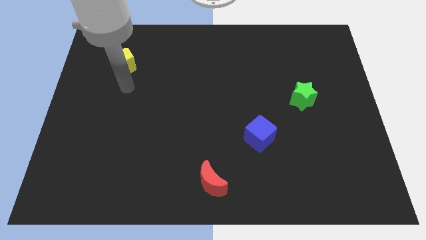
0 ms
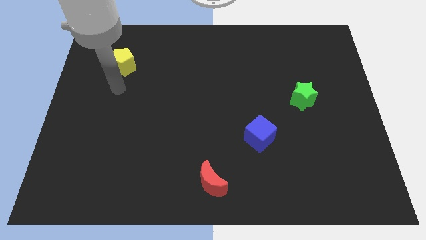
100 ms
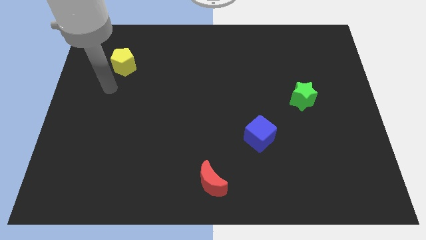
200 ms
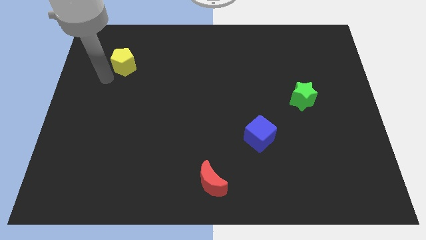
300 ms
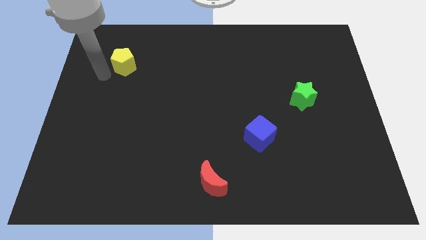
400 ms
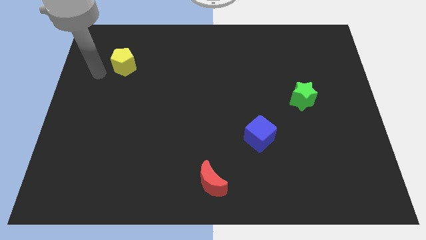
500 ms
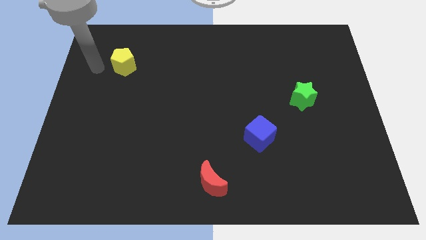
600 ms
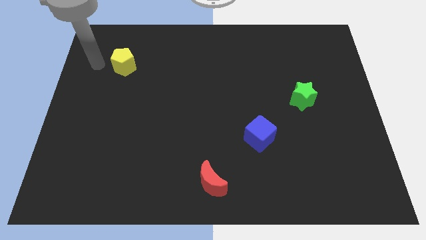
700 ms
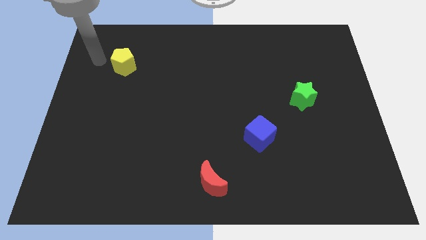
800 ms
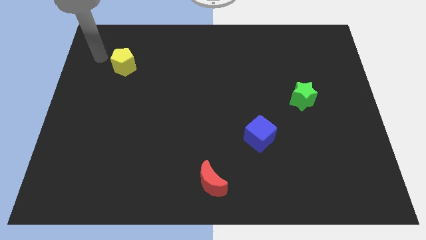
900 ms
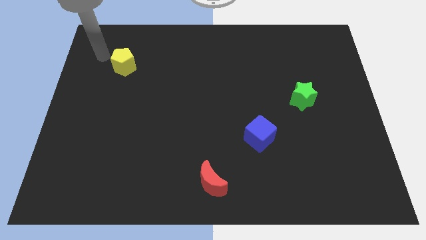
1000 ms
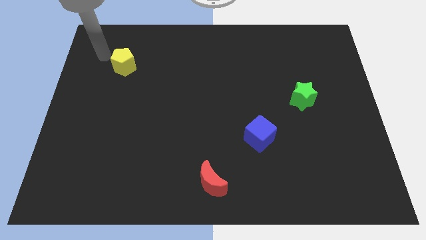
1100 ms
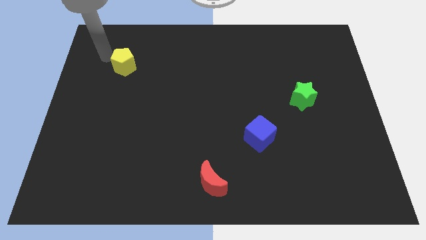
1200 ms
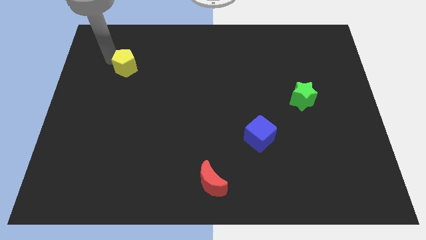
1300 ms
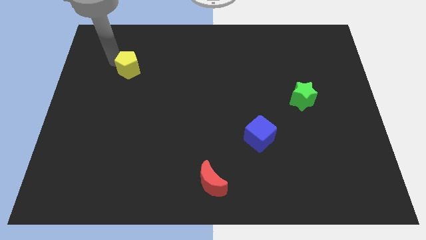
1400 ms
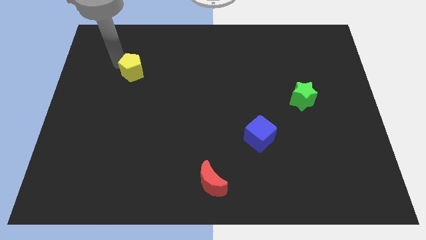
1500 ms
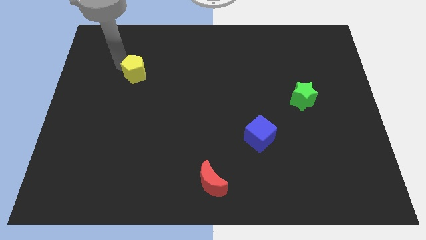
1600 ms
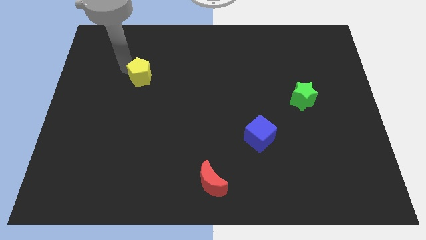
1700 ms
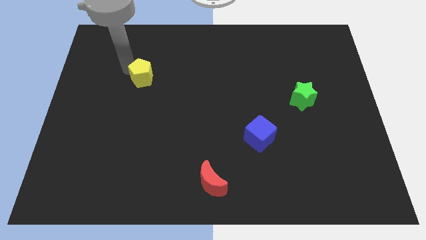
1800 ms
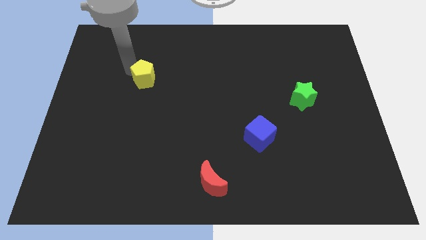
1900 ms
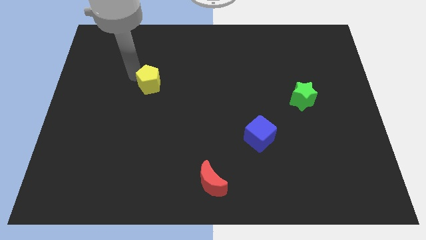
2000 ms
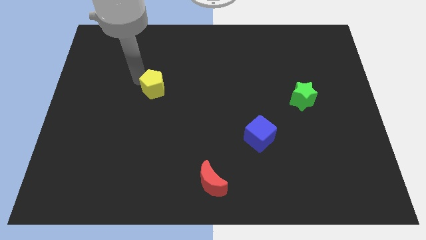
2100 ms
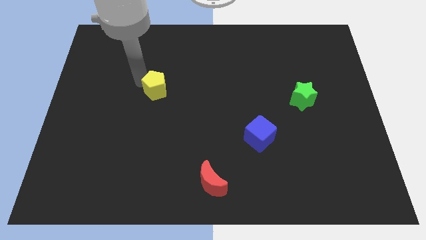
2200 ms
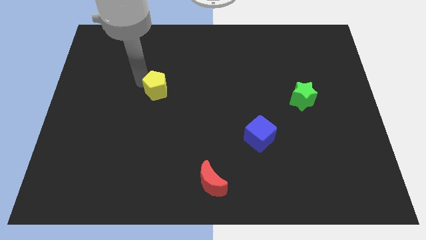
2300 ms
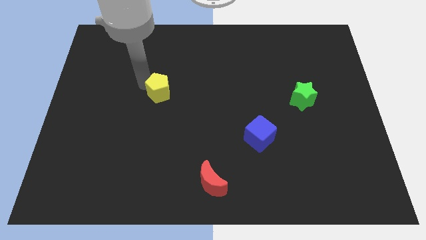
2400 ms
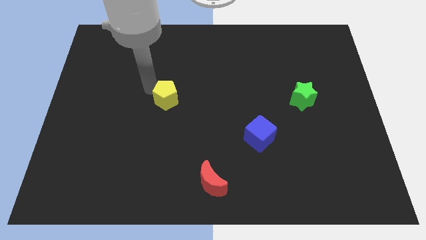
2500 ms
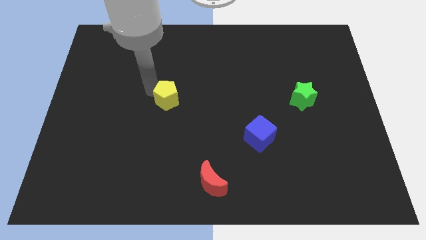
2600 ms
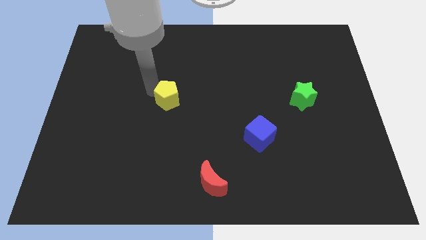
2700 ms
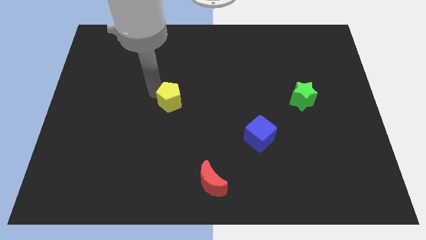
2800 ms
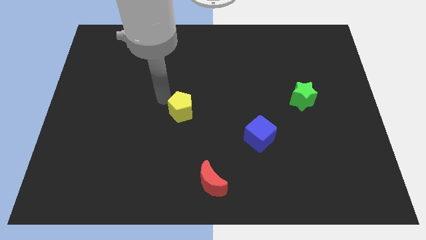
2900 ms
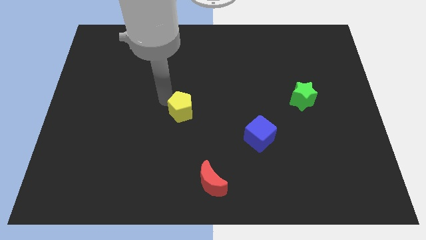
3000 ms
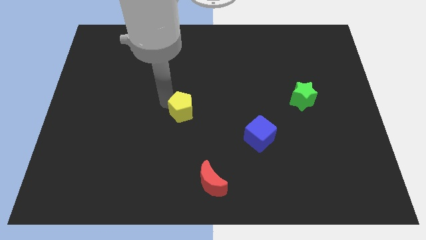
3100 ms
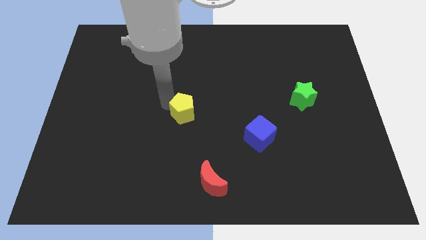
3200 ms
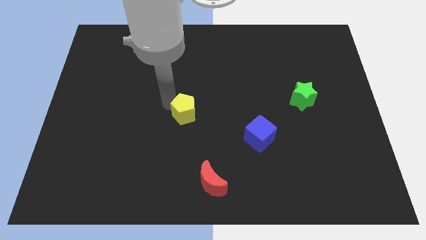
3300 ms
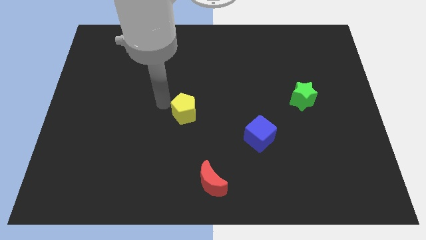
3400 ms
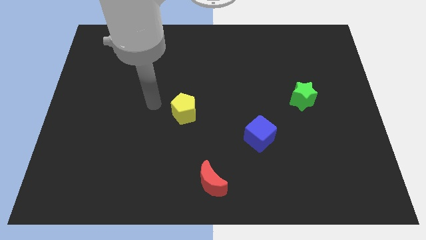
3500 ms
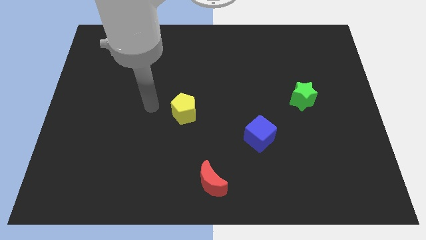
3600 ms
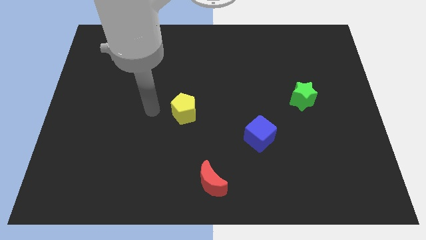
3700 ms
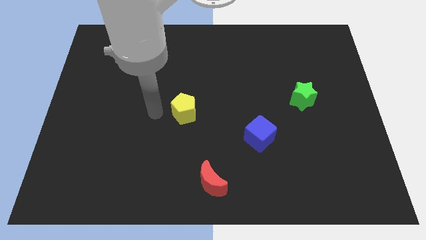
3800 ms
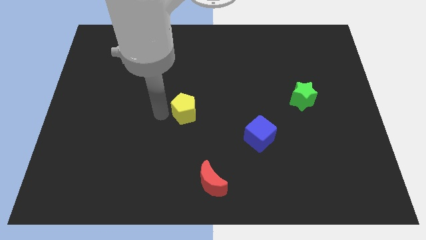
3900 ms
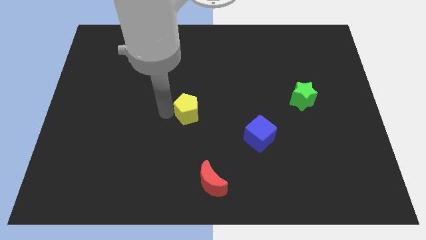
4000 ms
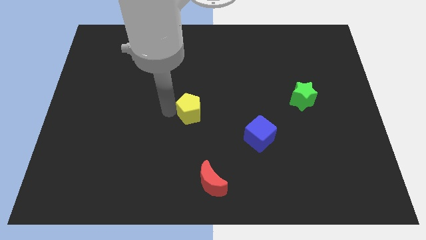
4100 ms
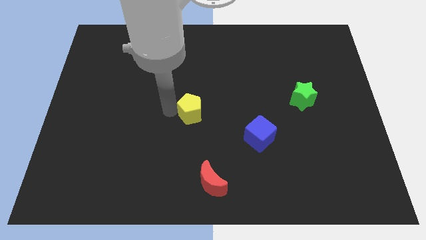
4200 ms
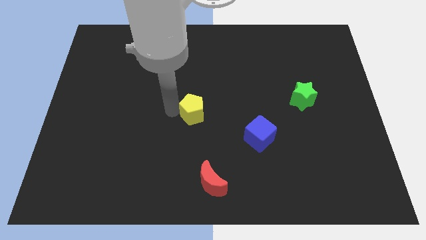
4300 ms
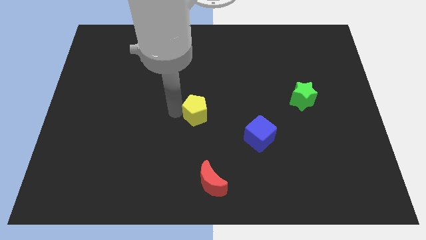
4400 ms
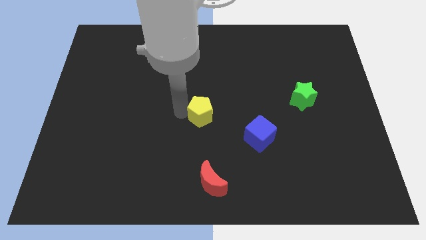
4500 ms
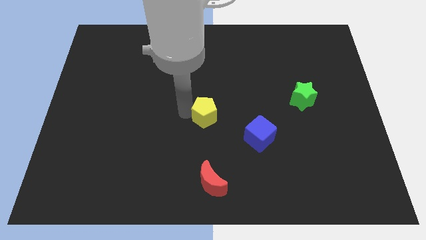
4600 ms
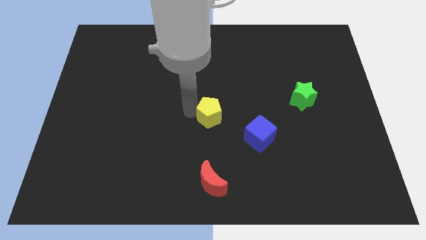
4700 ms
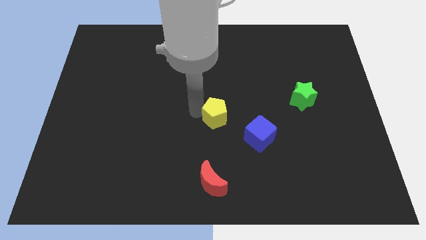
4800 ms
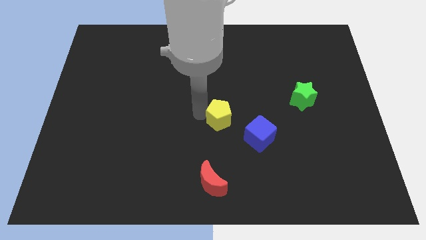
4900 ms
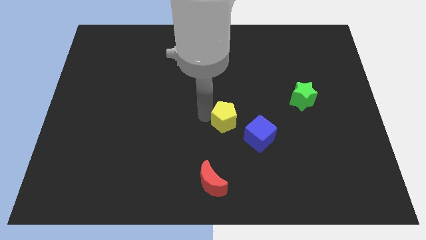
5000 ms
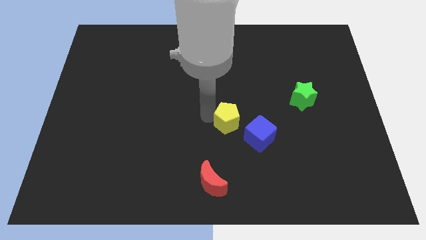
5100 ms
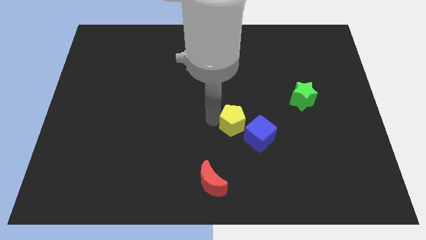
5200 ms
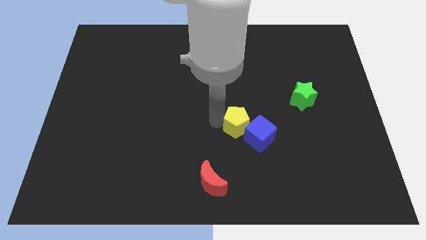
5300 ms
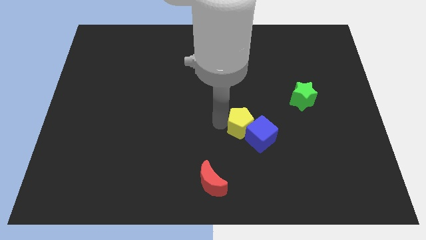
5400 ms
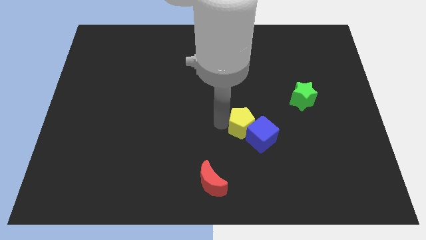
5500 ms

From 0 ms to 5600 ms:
slide the yellow pentagon next to the blue block

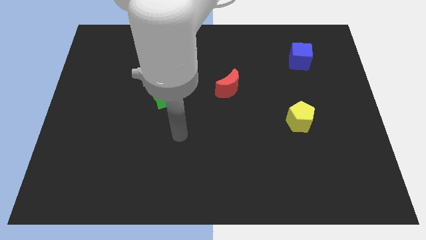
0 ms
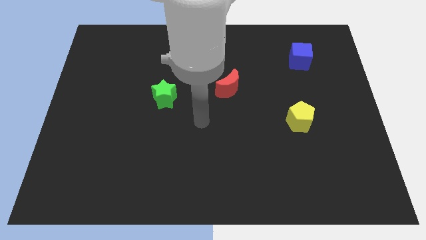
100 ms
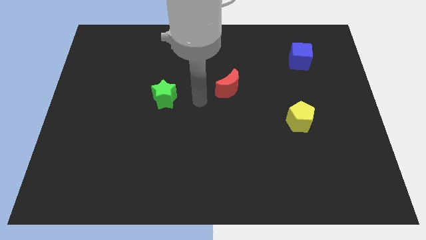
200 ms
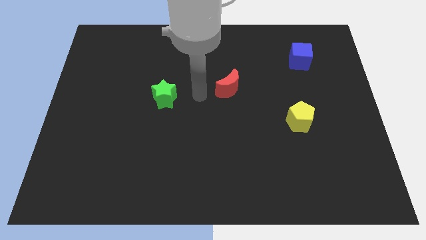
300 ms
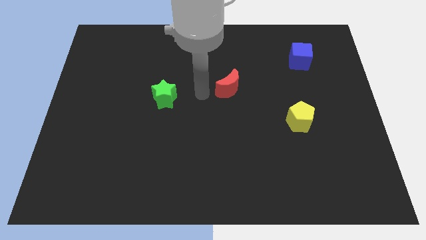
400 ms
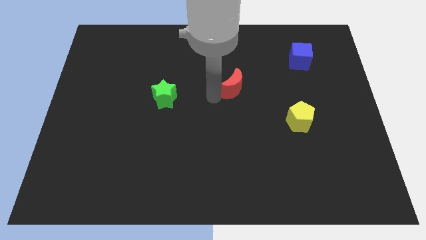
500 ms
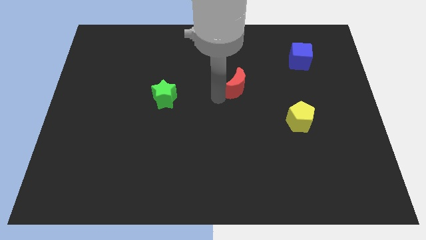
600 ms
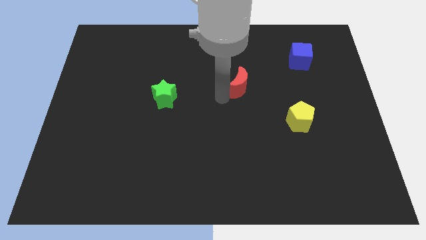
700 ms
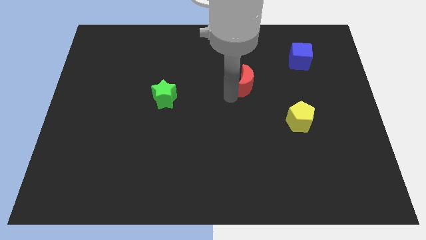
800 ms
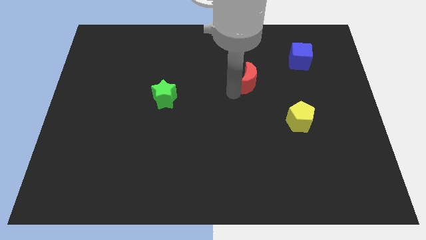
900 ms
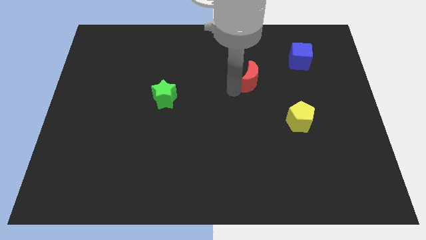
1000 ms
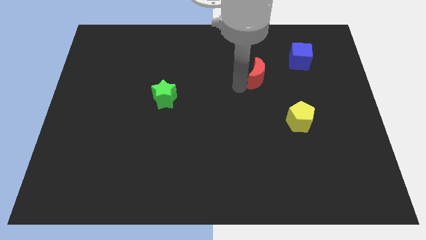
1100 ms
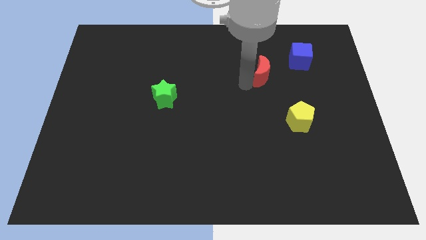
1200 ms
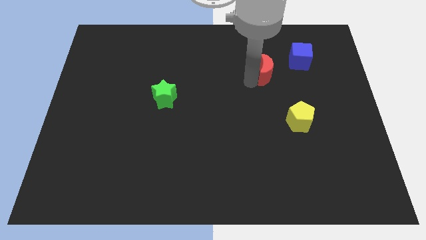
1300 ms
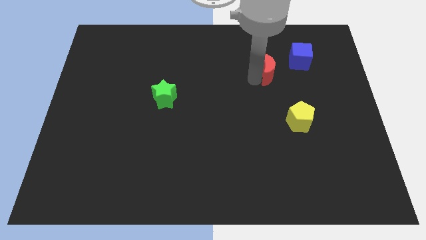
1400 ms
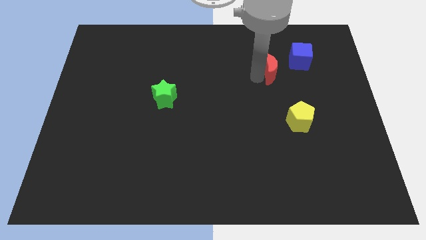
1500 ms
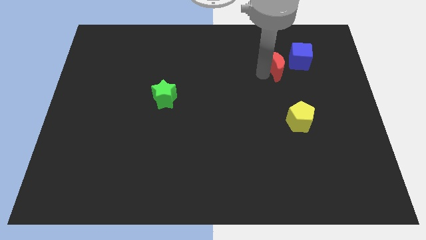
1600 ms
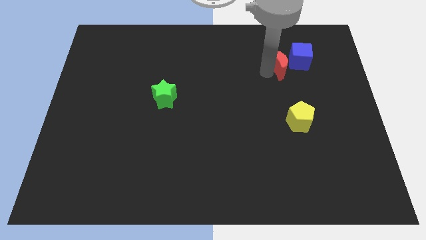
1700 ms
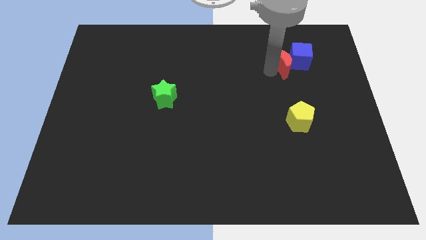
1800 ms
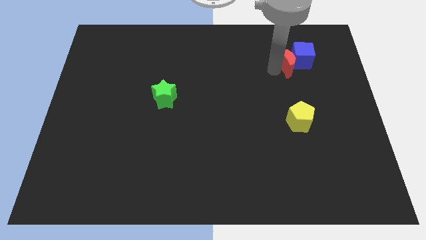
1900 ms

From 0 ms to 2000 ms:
slide the red moon next to the blue block

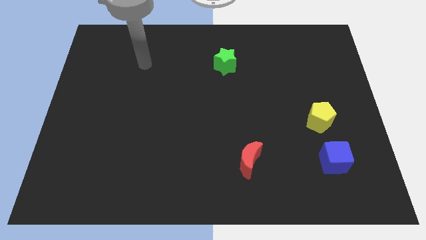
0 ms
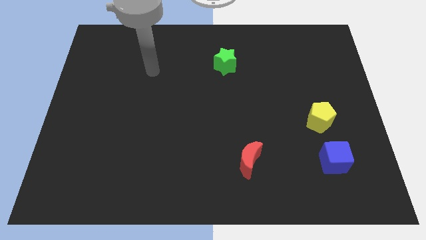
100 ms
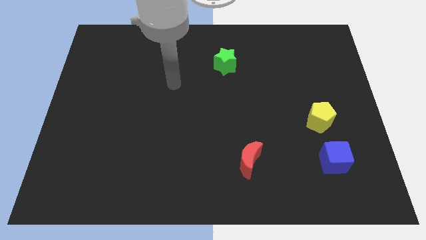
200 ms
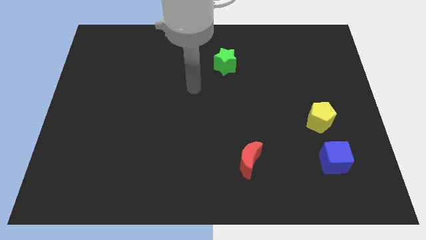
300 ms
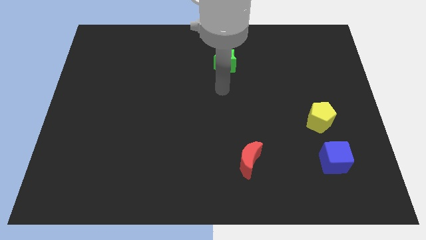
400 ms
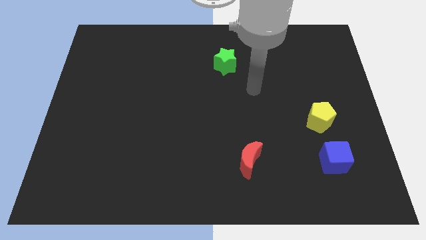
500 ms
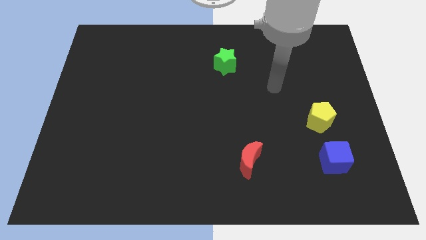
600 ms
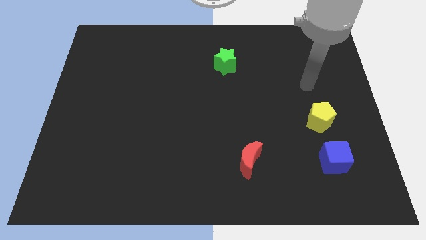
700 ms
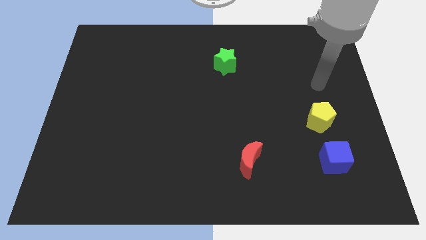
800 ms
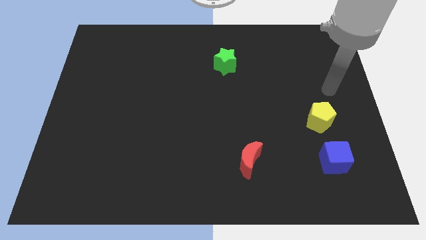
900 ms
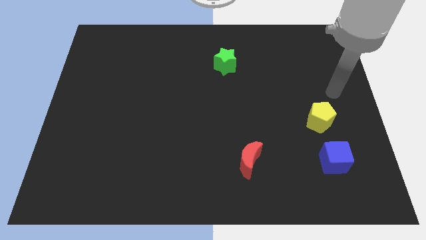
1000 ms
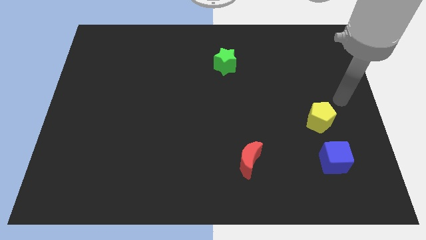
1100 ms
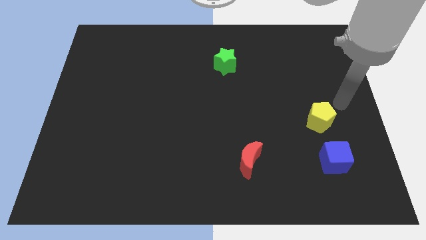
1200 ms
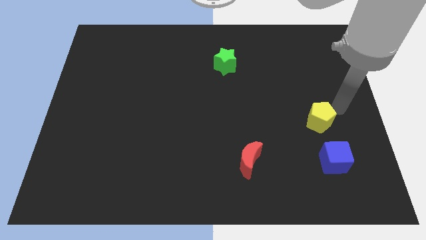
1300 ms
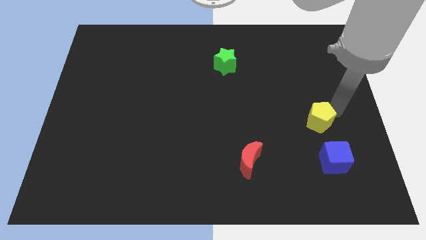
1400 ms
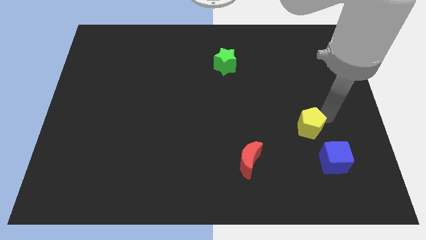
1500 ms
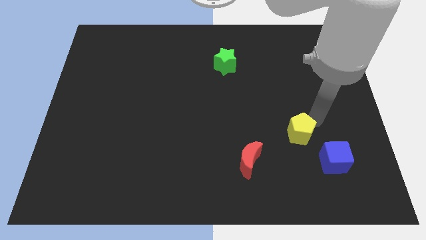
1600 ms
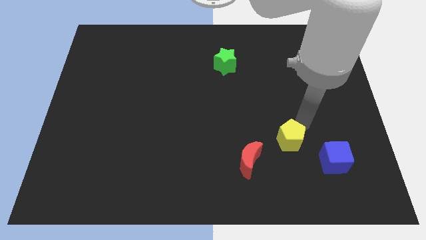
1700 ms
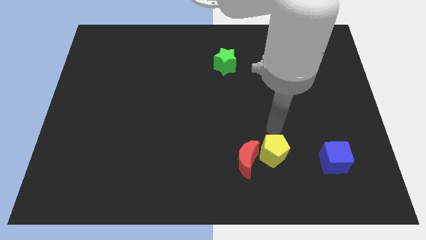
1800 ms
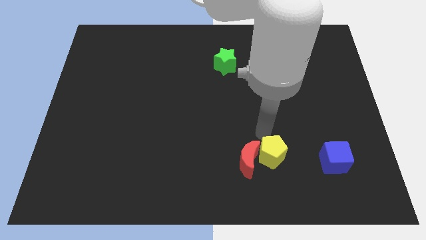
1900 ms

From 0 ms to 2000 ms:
push the pentagon next to the moon
